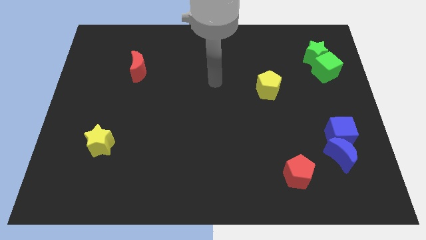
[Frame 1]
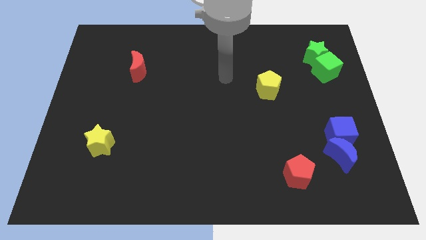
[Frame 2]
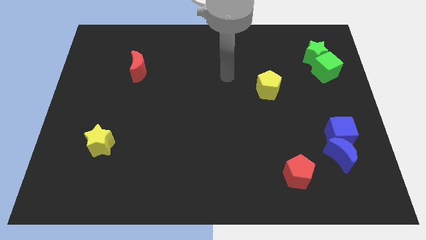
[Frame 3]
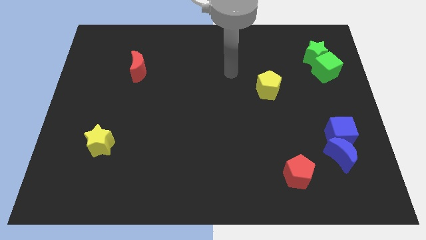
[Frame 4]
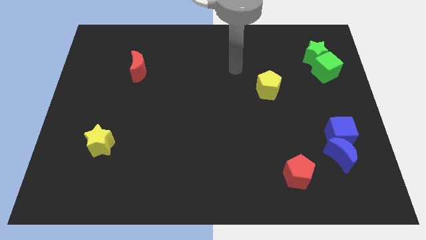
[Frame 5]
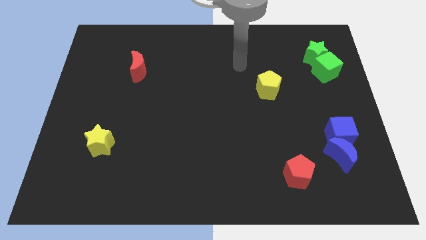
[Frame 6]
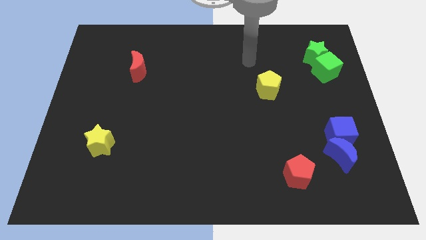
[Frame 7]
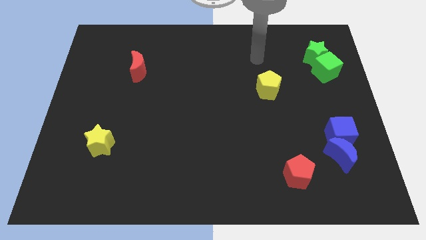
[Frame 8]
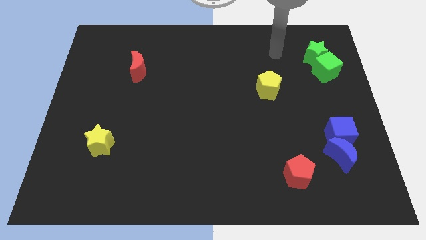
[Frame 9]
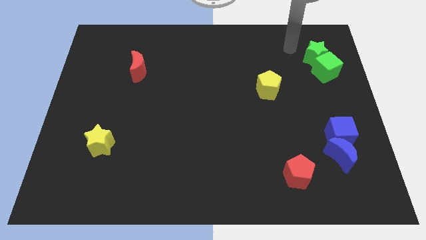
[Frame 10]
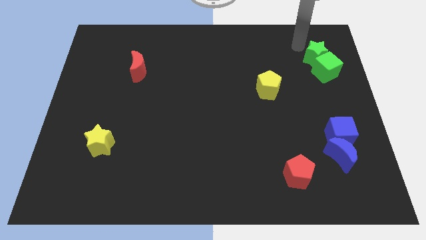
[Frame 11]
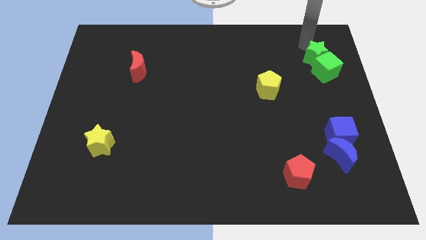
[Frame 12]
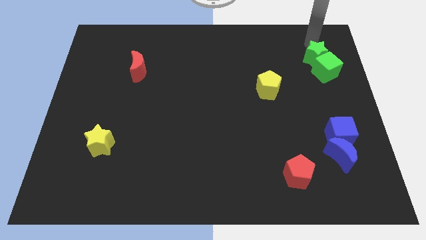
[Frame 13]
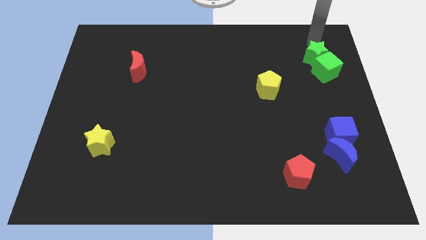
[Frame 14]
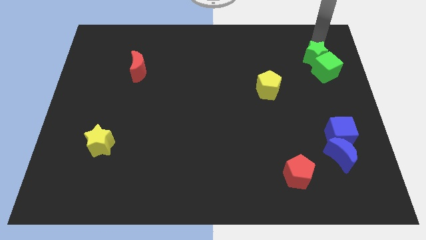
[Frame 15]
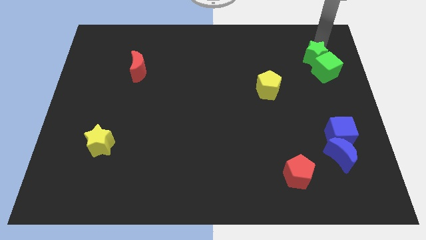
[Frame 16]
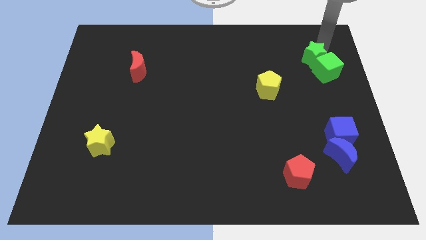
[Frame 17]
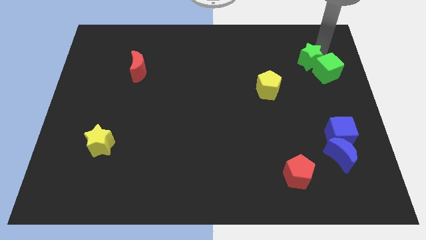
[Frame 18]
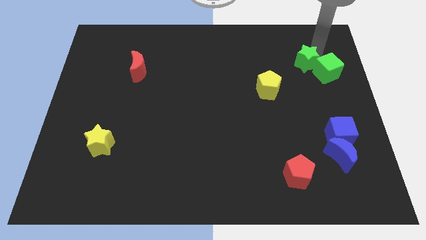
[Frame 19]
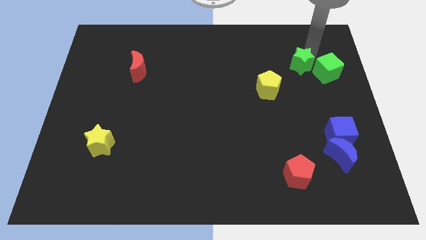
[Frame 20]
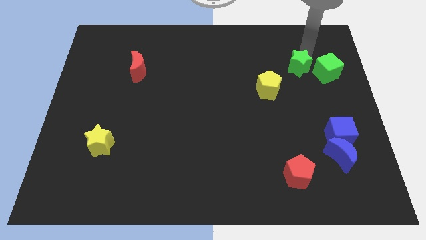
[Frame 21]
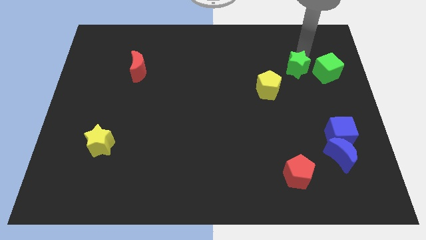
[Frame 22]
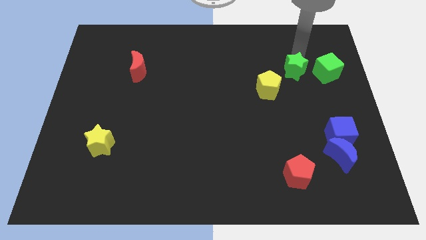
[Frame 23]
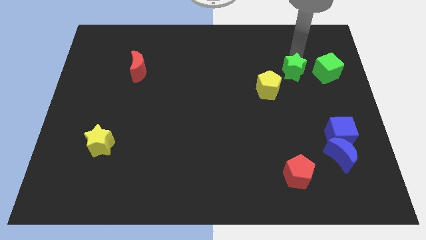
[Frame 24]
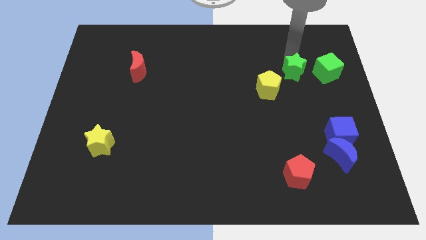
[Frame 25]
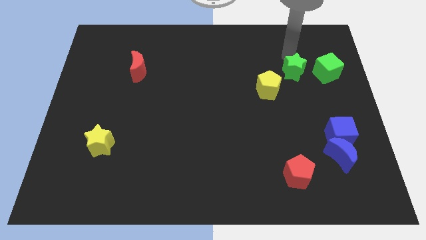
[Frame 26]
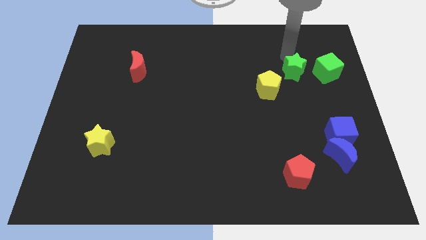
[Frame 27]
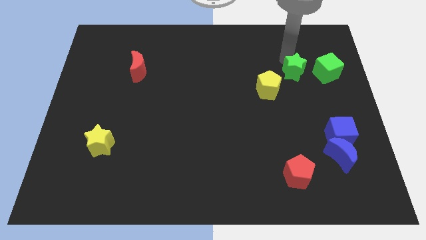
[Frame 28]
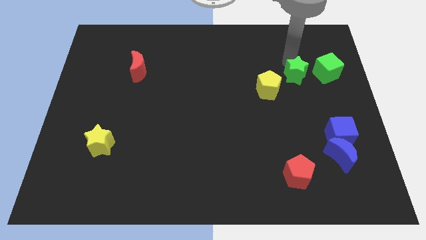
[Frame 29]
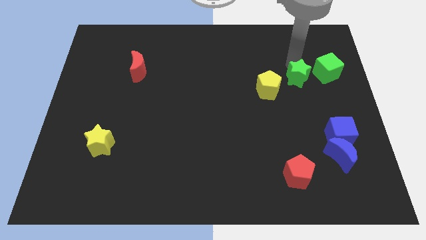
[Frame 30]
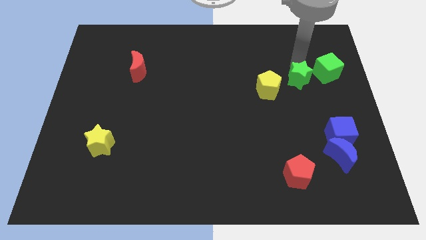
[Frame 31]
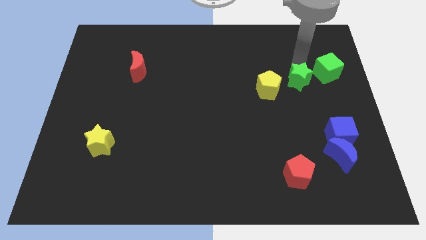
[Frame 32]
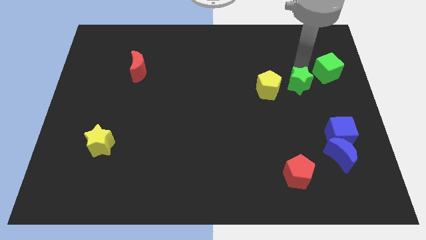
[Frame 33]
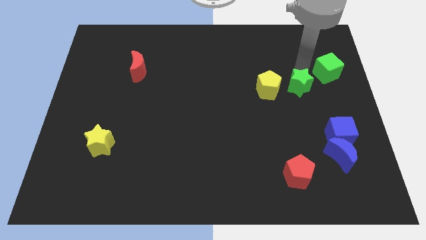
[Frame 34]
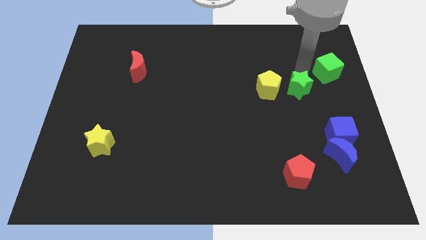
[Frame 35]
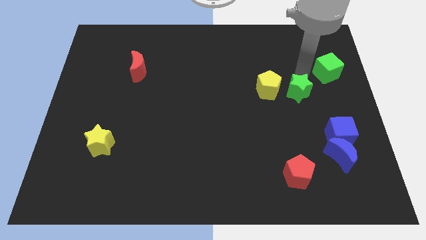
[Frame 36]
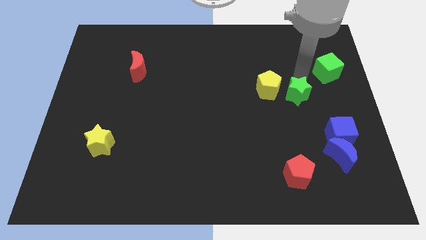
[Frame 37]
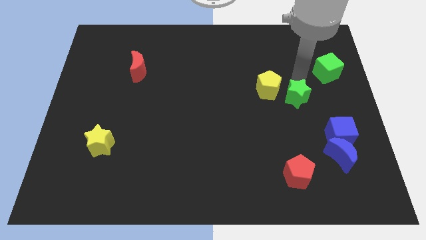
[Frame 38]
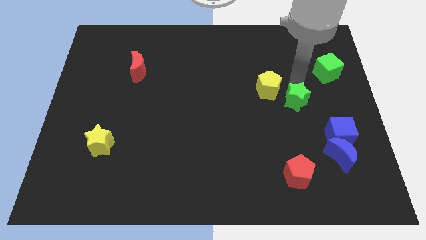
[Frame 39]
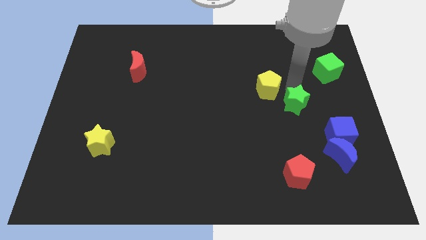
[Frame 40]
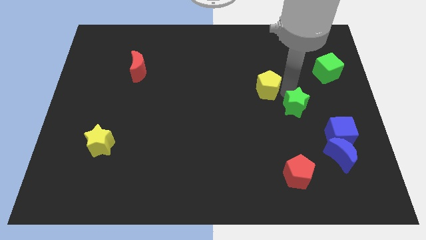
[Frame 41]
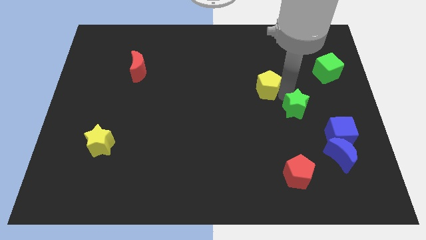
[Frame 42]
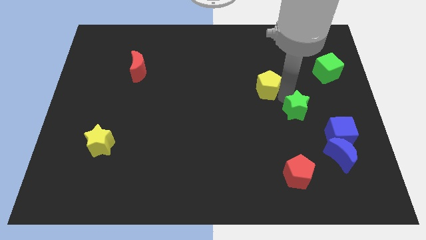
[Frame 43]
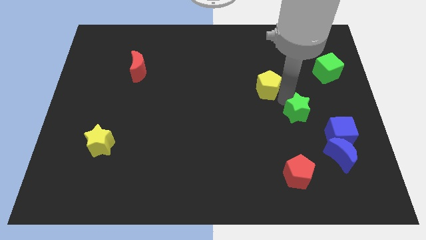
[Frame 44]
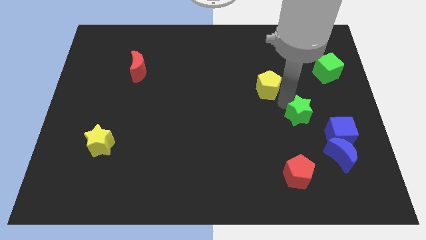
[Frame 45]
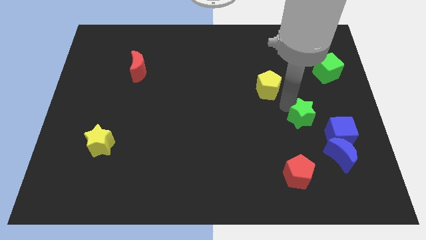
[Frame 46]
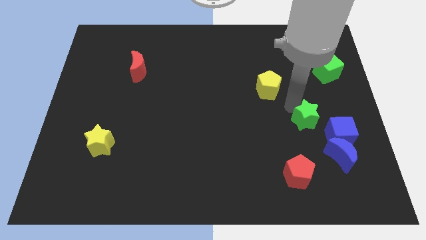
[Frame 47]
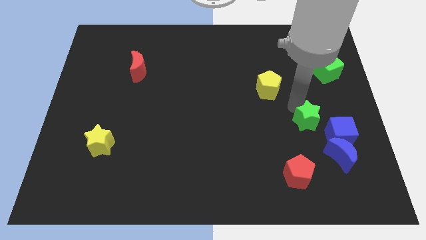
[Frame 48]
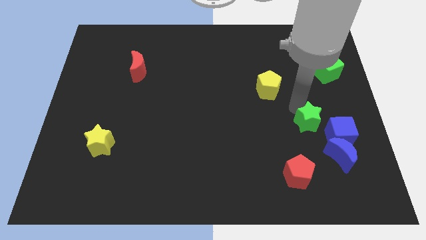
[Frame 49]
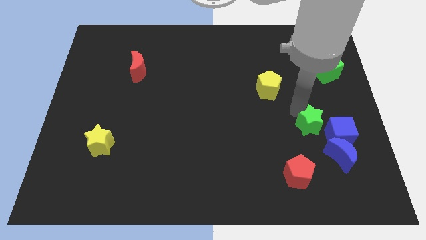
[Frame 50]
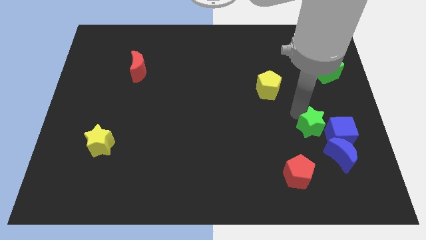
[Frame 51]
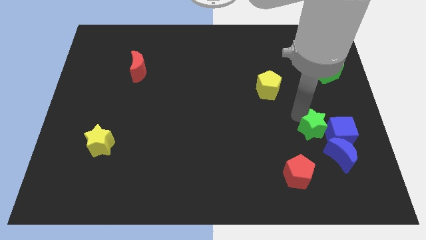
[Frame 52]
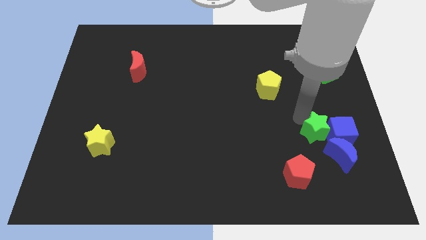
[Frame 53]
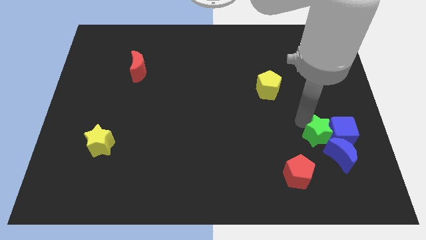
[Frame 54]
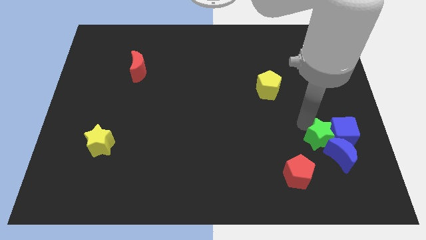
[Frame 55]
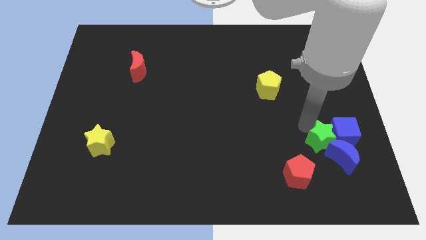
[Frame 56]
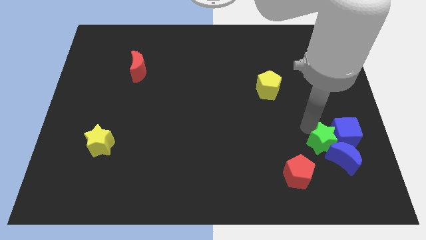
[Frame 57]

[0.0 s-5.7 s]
put the green star next to the blue moon

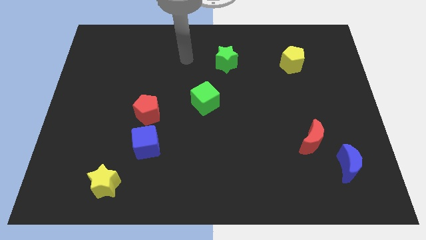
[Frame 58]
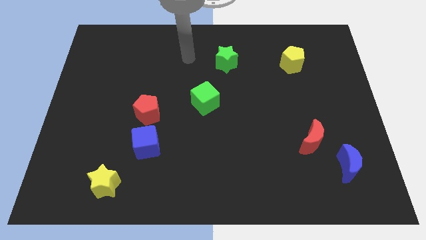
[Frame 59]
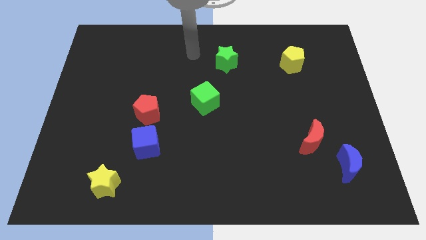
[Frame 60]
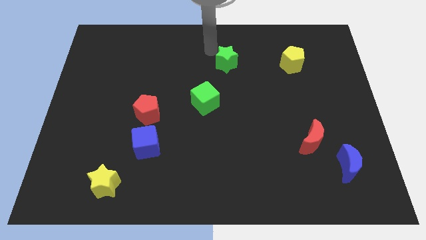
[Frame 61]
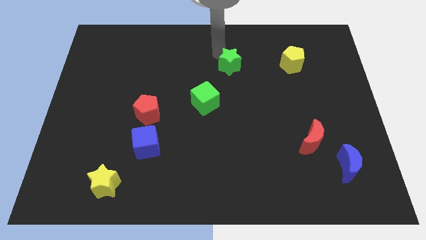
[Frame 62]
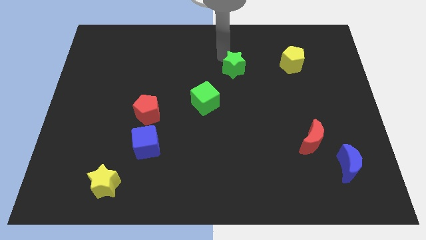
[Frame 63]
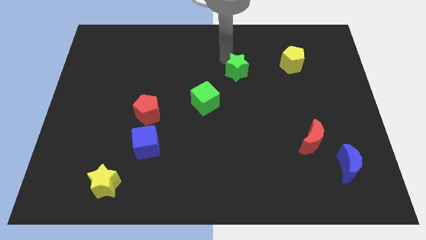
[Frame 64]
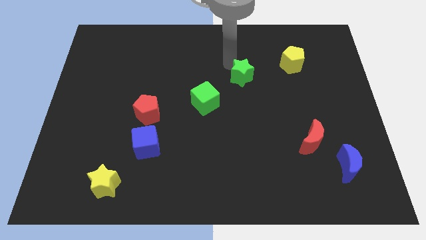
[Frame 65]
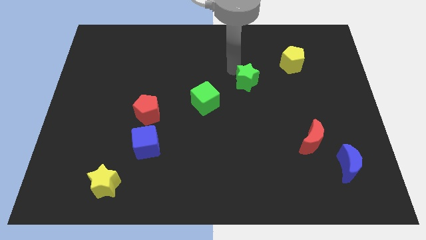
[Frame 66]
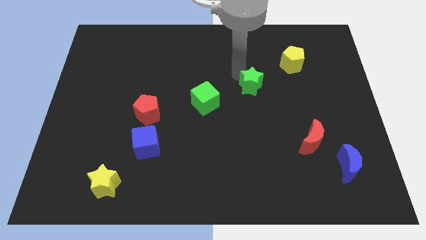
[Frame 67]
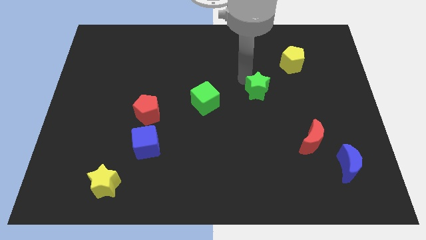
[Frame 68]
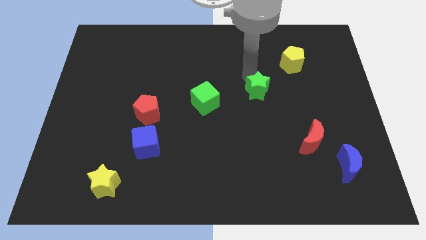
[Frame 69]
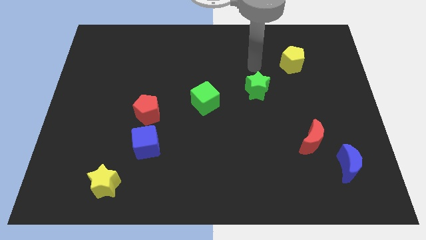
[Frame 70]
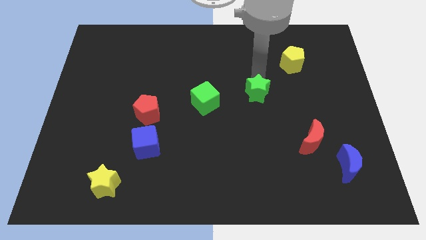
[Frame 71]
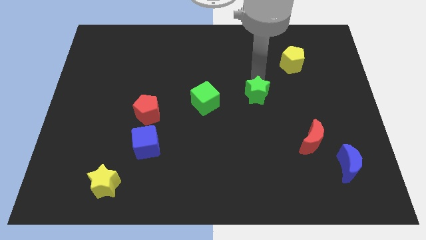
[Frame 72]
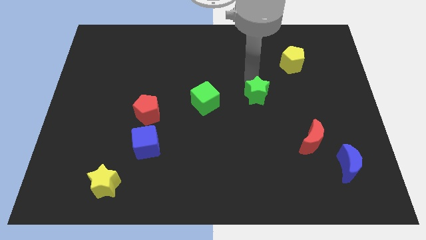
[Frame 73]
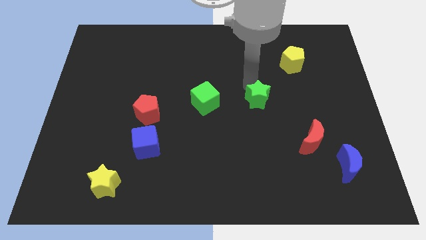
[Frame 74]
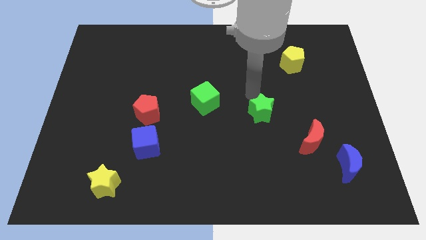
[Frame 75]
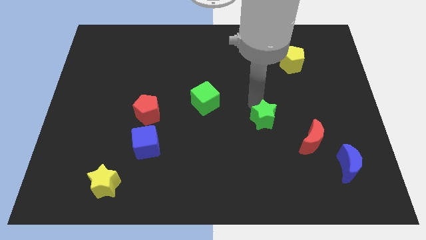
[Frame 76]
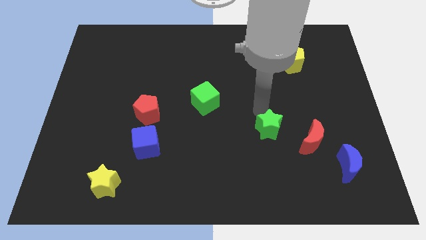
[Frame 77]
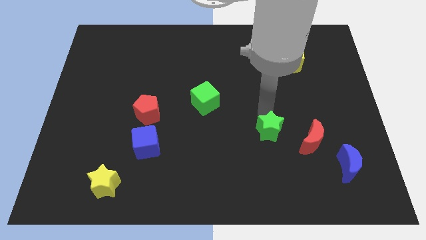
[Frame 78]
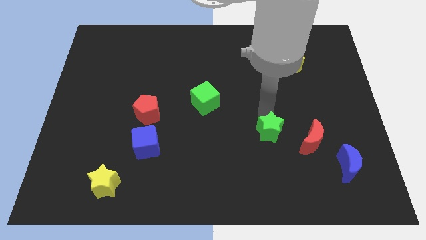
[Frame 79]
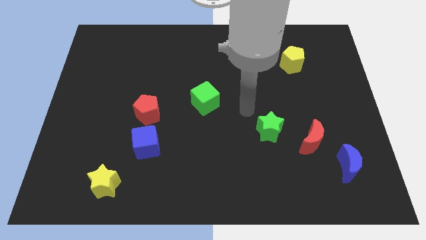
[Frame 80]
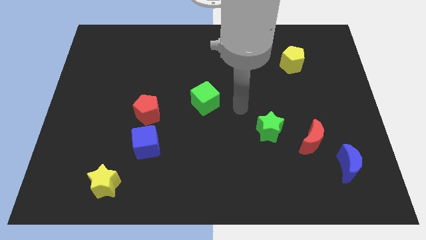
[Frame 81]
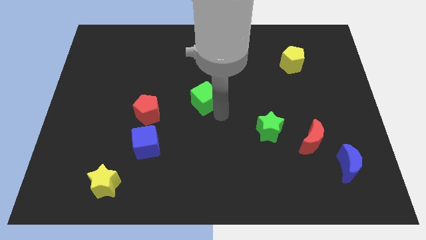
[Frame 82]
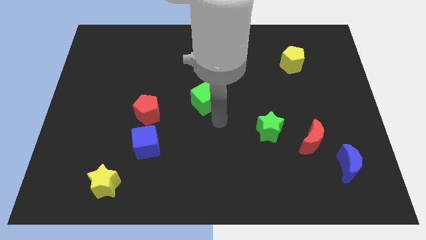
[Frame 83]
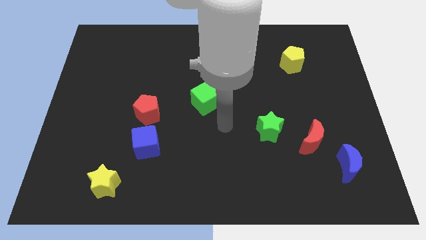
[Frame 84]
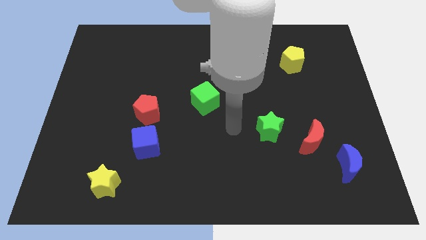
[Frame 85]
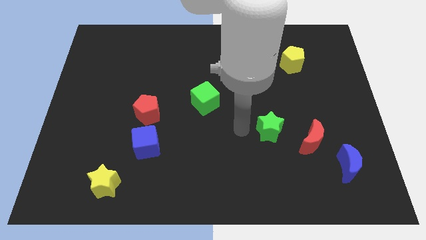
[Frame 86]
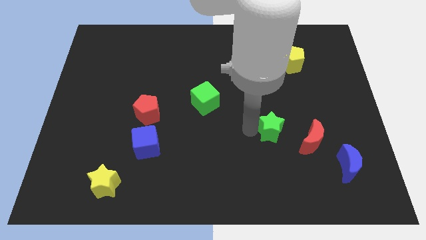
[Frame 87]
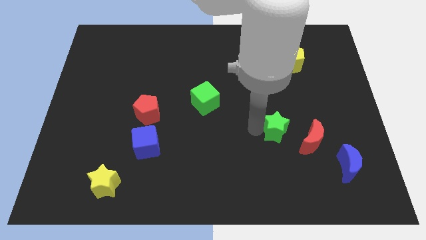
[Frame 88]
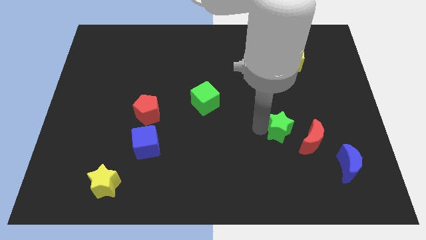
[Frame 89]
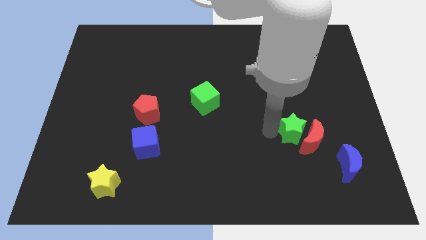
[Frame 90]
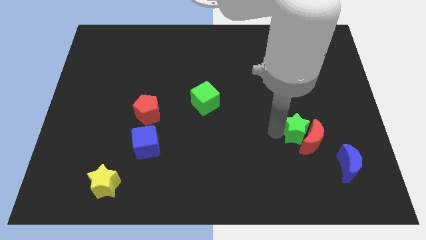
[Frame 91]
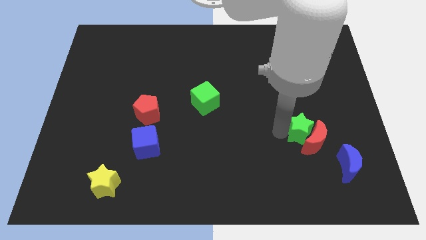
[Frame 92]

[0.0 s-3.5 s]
put the green star towards the red moon
